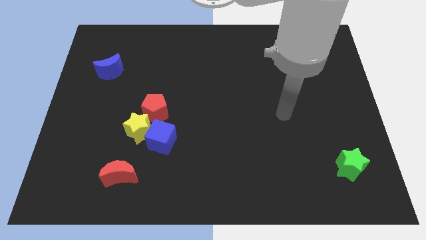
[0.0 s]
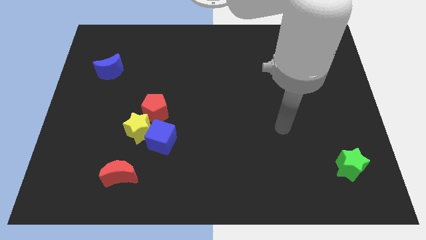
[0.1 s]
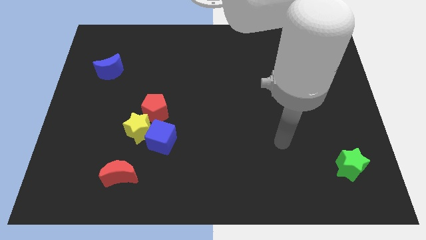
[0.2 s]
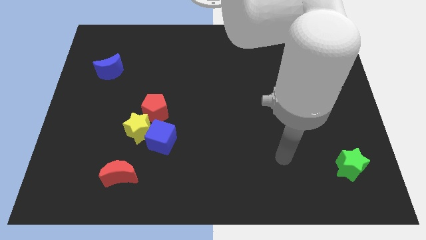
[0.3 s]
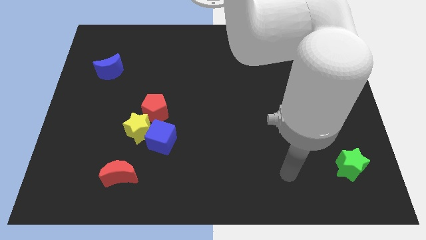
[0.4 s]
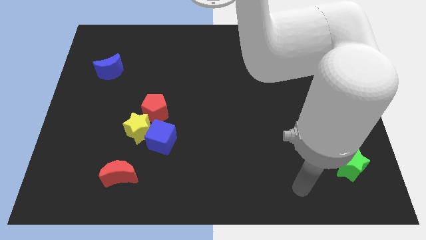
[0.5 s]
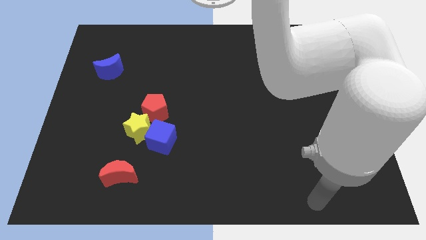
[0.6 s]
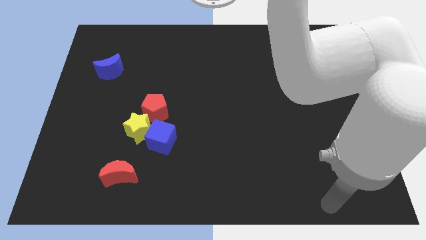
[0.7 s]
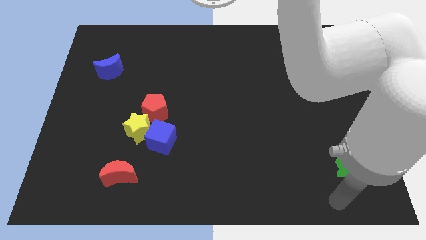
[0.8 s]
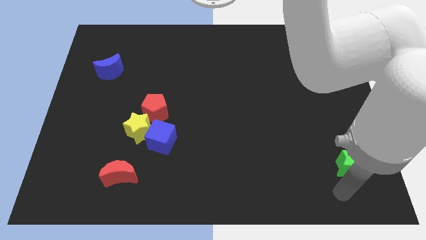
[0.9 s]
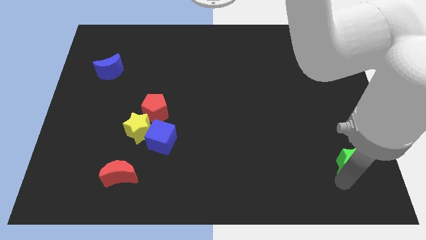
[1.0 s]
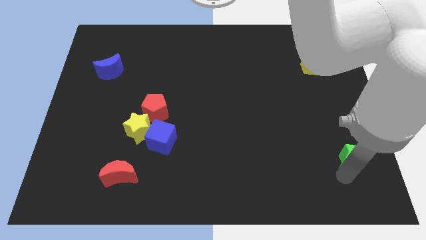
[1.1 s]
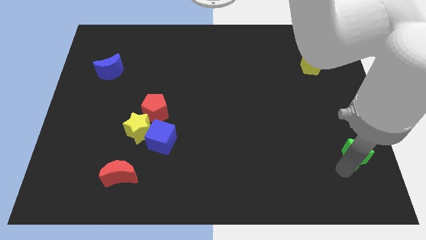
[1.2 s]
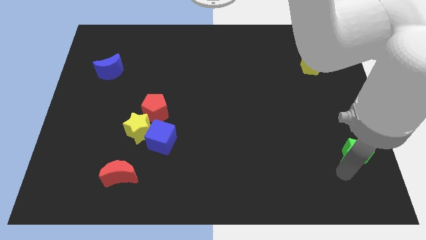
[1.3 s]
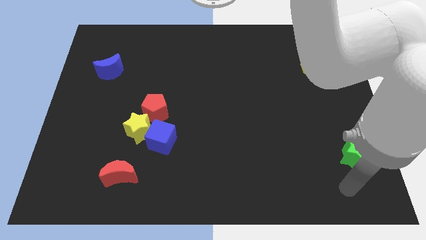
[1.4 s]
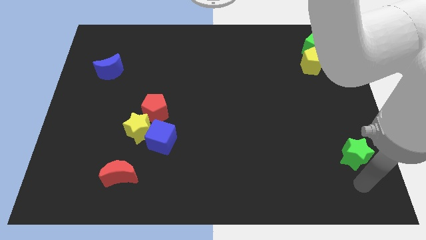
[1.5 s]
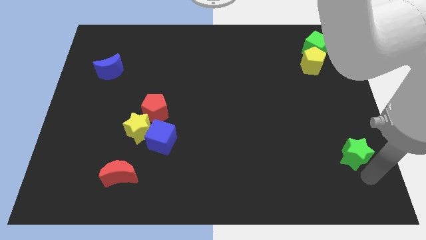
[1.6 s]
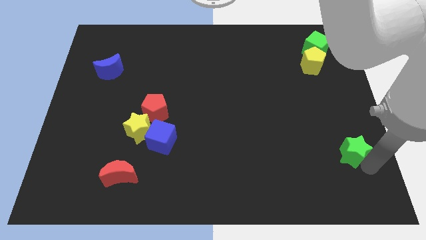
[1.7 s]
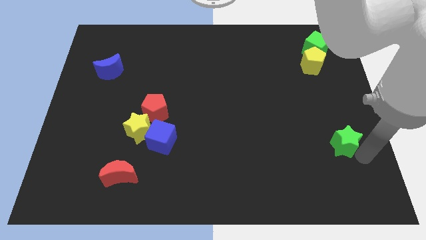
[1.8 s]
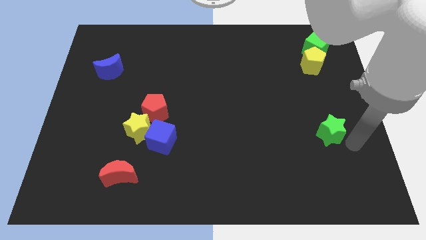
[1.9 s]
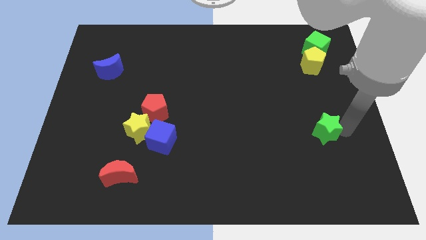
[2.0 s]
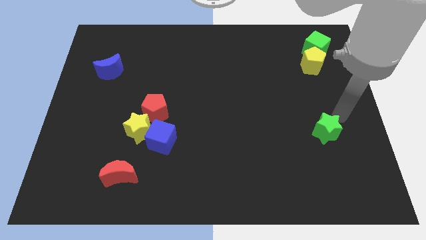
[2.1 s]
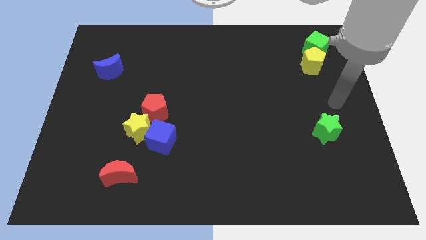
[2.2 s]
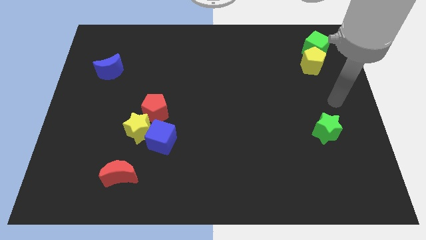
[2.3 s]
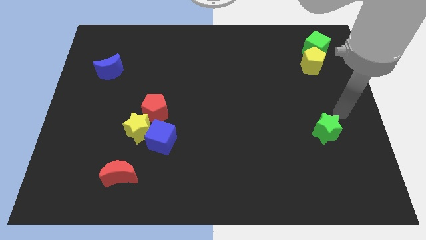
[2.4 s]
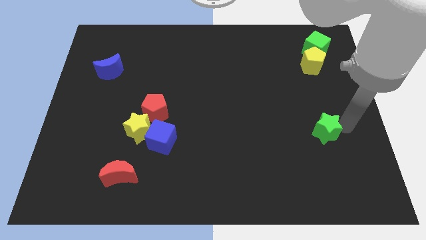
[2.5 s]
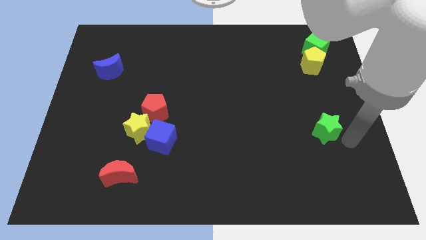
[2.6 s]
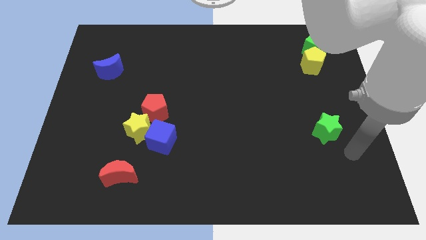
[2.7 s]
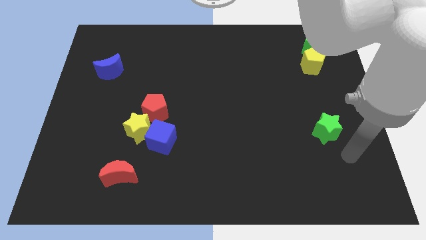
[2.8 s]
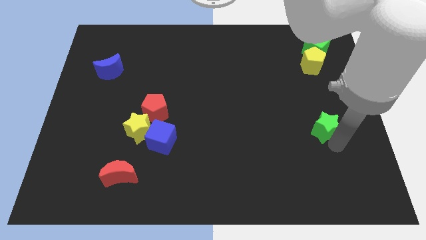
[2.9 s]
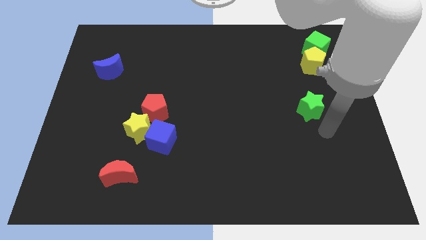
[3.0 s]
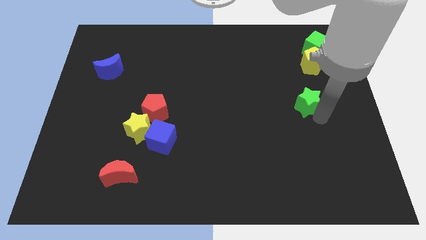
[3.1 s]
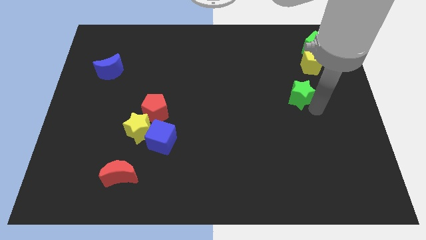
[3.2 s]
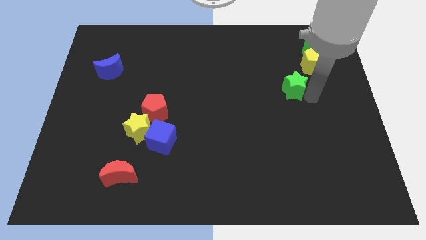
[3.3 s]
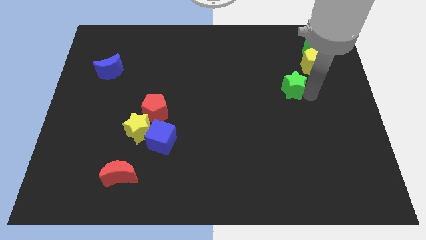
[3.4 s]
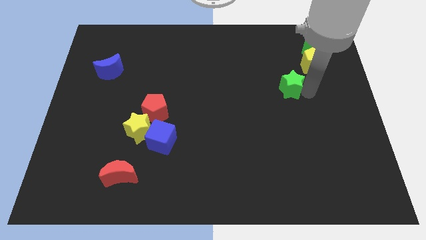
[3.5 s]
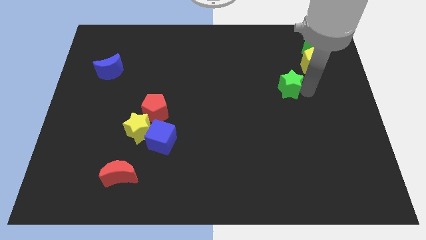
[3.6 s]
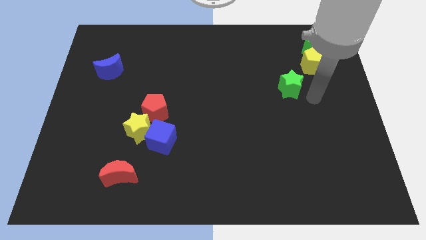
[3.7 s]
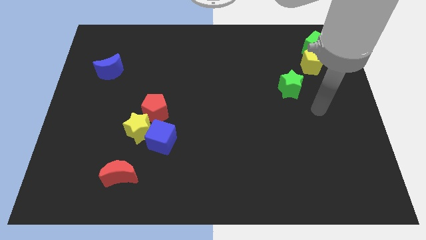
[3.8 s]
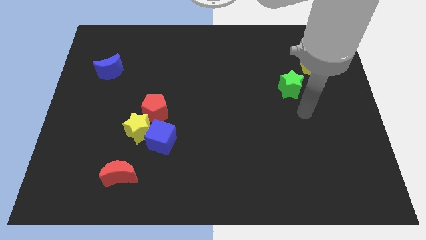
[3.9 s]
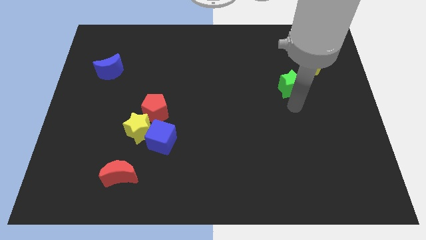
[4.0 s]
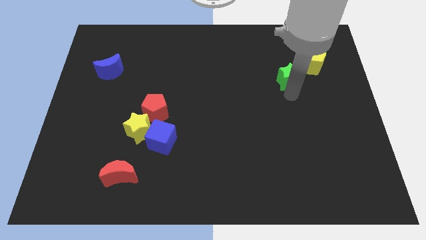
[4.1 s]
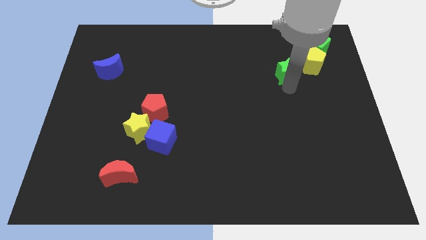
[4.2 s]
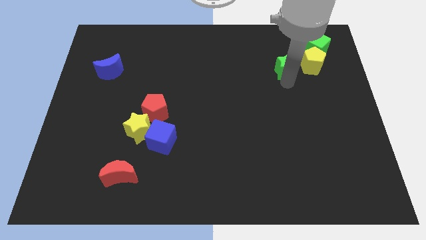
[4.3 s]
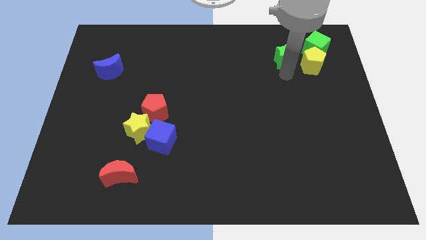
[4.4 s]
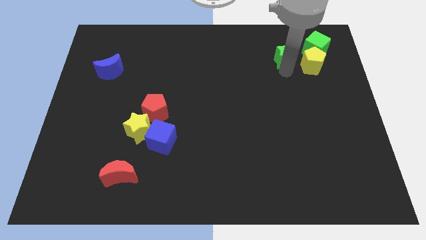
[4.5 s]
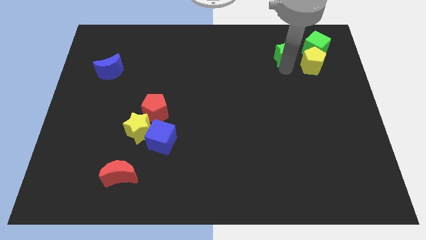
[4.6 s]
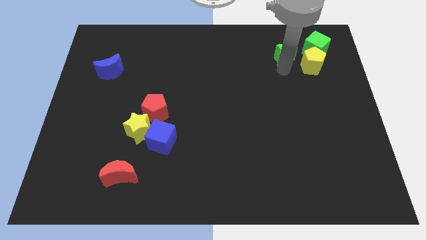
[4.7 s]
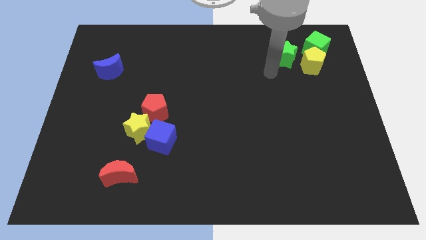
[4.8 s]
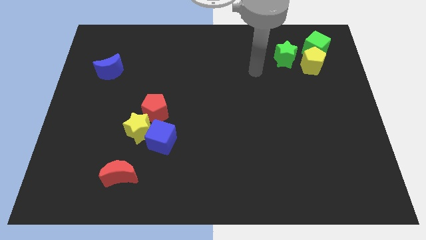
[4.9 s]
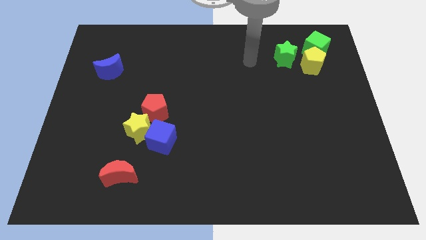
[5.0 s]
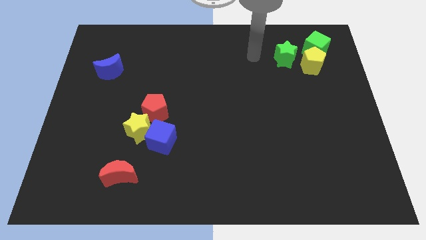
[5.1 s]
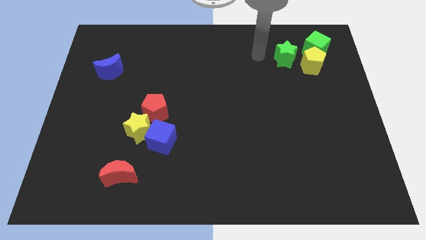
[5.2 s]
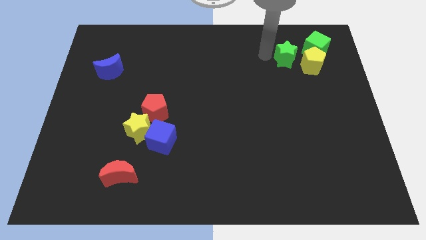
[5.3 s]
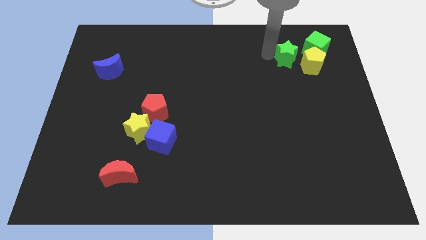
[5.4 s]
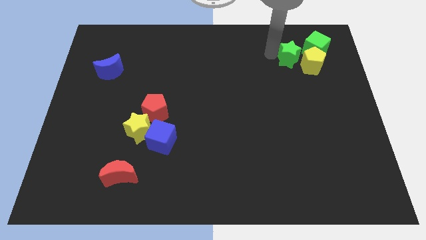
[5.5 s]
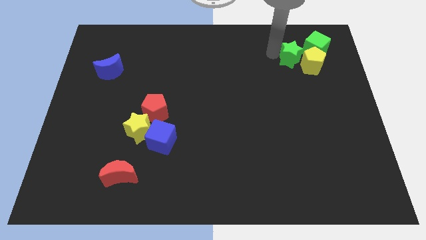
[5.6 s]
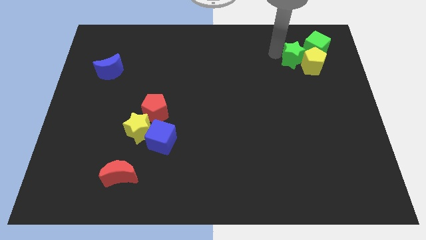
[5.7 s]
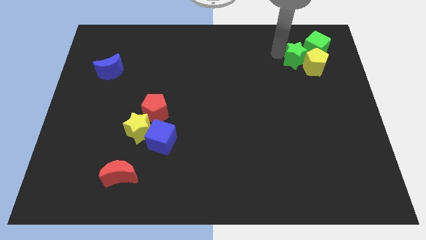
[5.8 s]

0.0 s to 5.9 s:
place the green star into the yellow pentagon

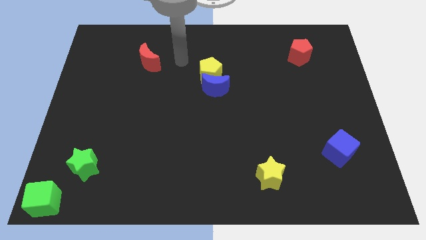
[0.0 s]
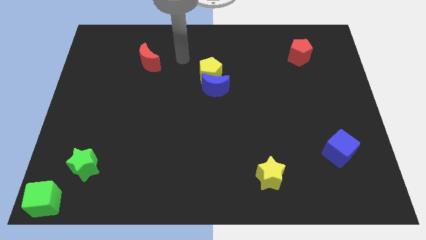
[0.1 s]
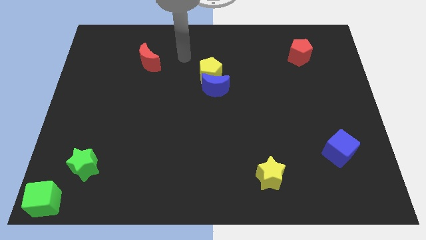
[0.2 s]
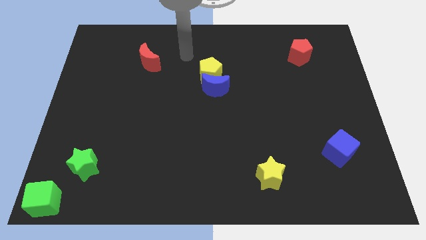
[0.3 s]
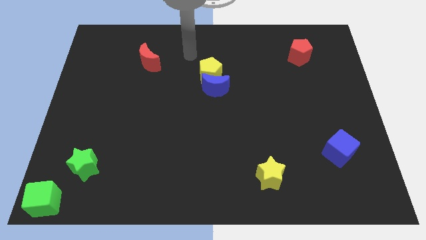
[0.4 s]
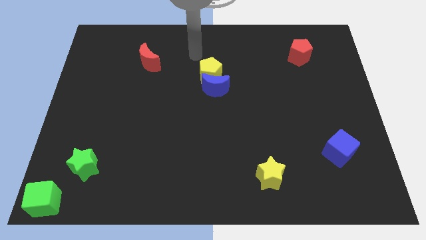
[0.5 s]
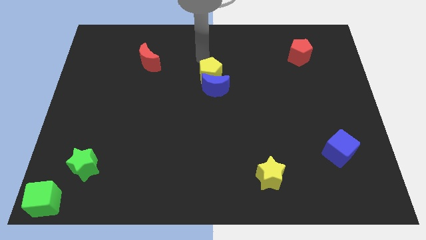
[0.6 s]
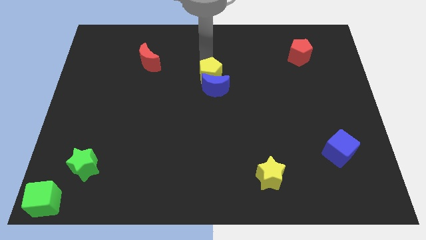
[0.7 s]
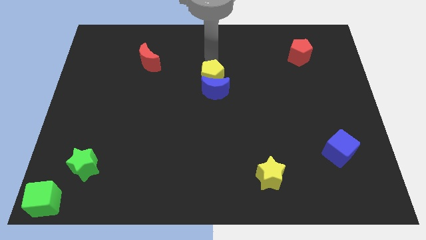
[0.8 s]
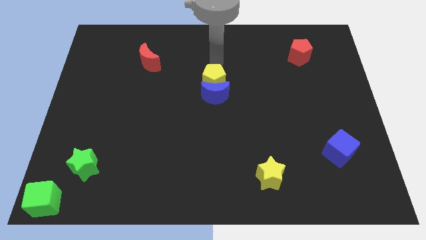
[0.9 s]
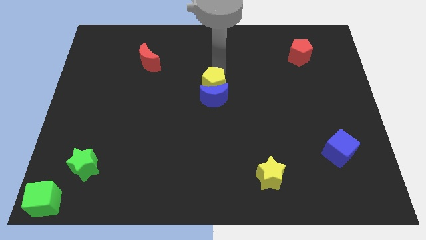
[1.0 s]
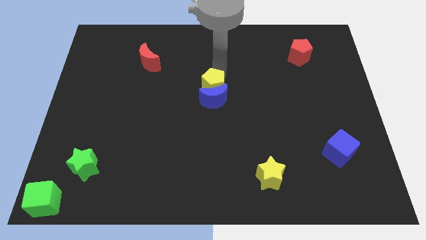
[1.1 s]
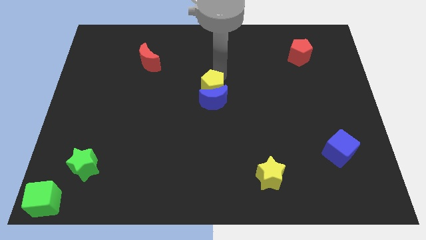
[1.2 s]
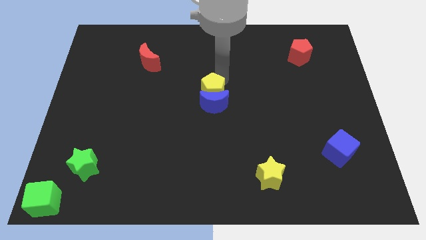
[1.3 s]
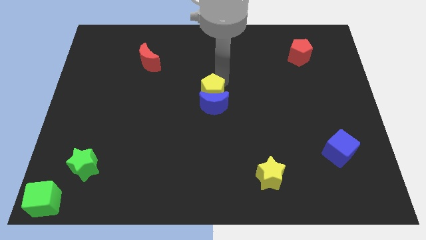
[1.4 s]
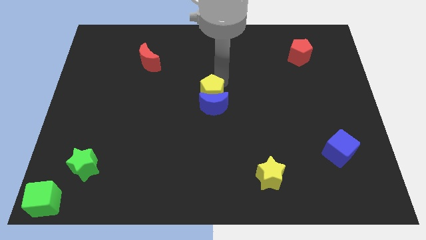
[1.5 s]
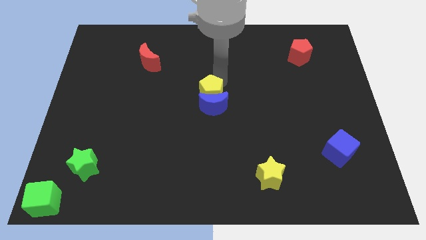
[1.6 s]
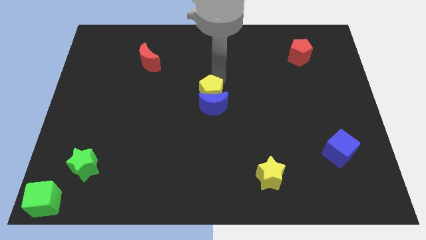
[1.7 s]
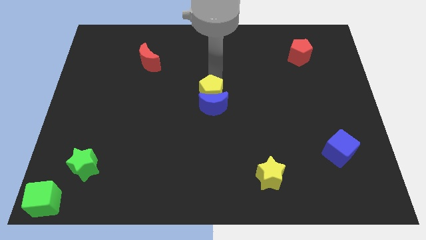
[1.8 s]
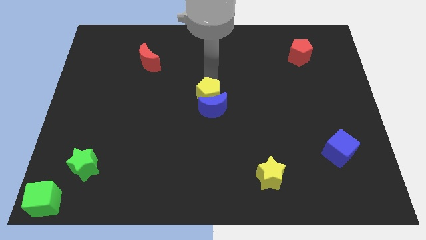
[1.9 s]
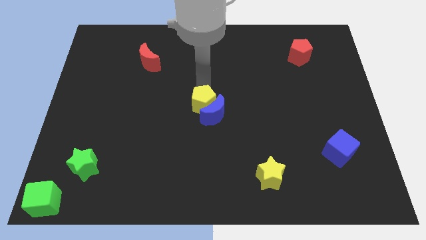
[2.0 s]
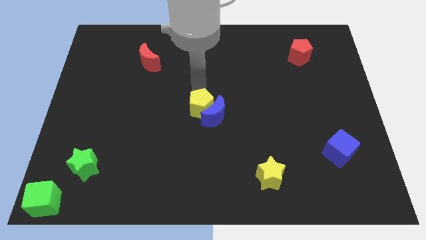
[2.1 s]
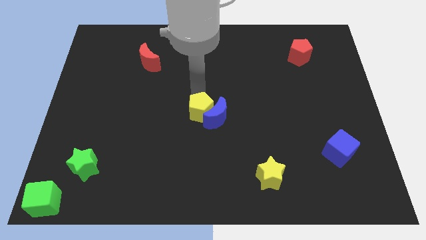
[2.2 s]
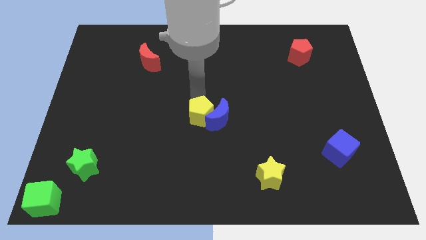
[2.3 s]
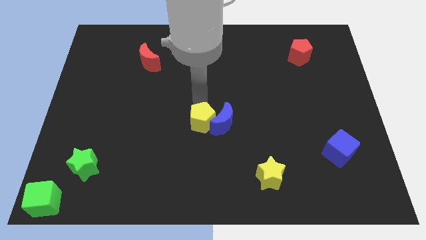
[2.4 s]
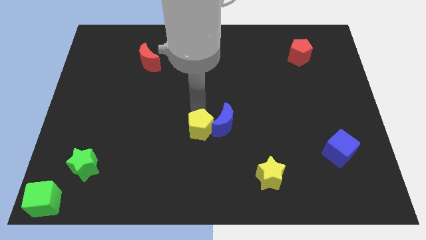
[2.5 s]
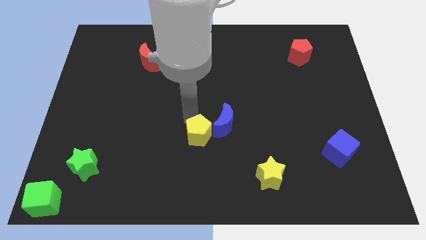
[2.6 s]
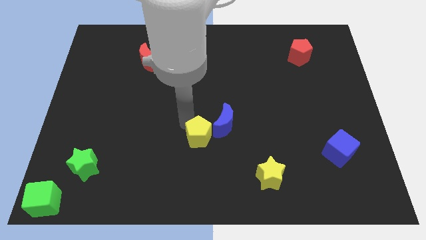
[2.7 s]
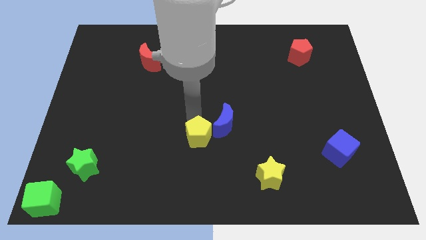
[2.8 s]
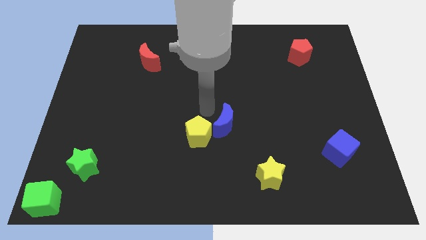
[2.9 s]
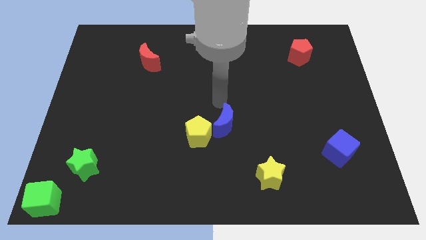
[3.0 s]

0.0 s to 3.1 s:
move the yellow pentagon to the center of board

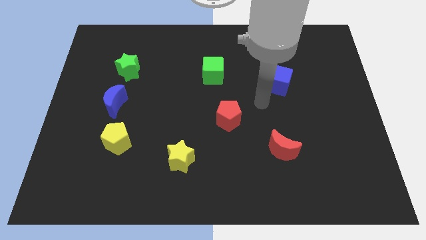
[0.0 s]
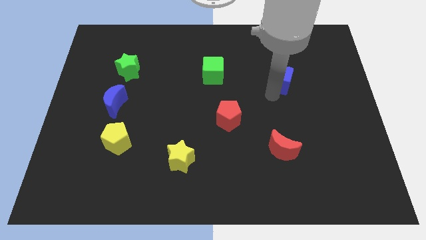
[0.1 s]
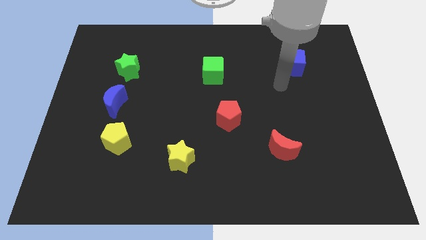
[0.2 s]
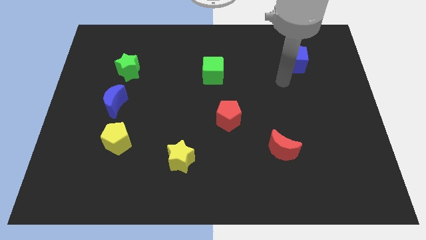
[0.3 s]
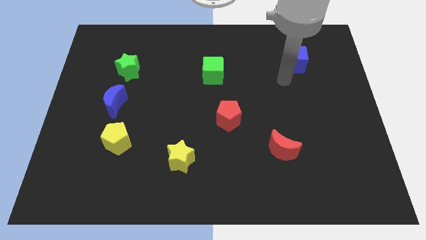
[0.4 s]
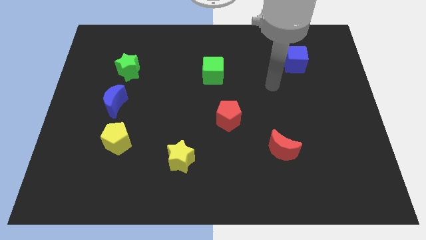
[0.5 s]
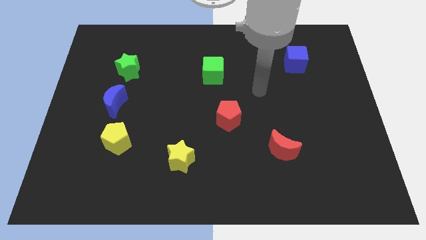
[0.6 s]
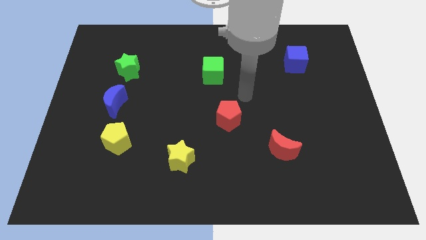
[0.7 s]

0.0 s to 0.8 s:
move the blue cube to the top right of the board
